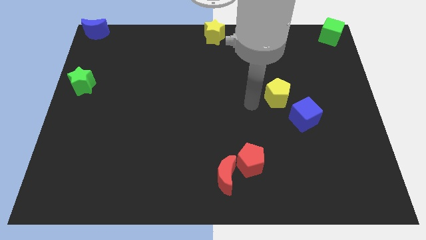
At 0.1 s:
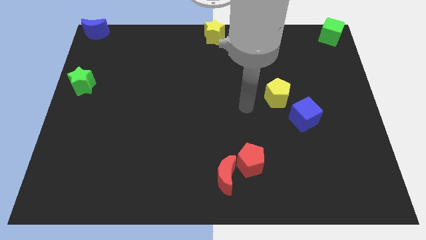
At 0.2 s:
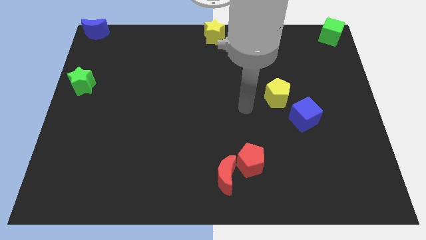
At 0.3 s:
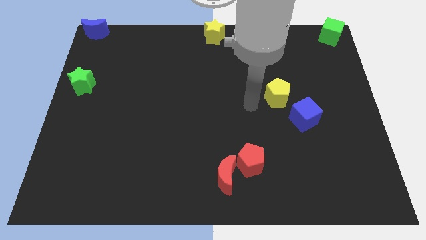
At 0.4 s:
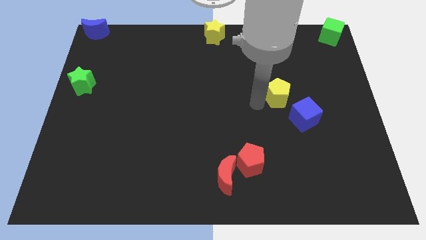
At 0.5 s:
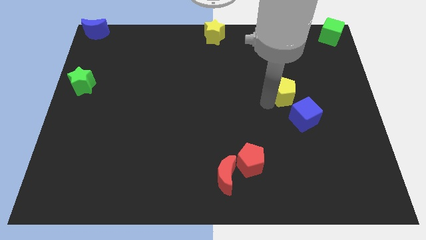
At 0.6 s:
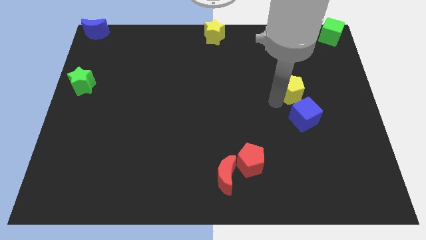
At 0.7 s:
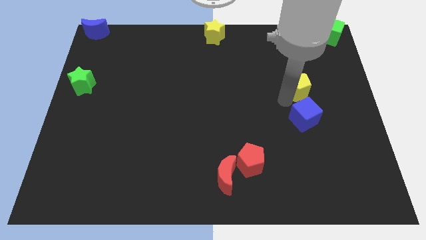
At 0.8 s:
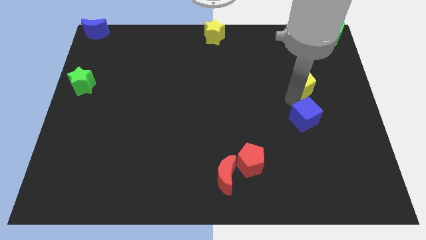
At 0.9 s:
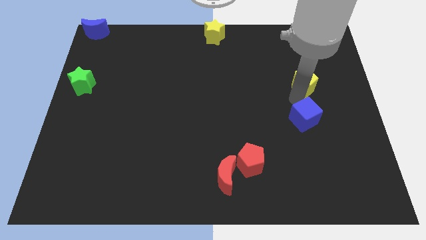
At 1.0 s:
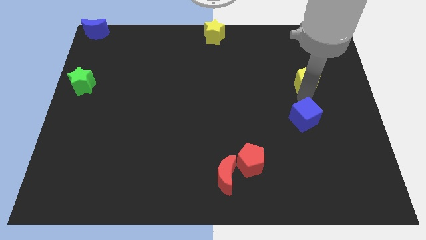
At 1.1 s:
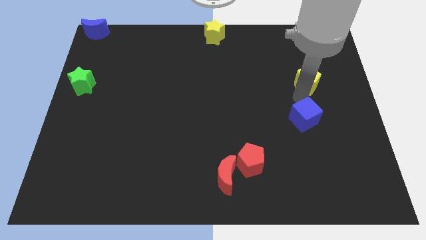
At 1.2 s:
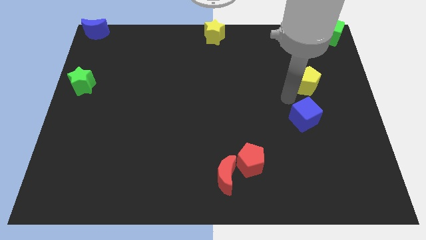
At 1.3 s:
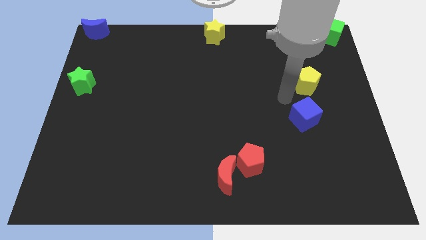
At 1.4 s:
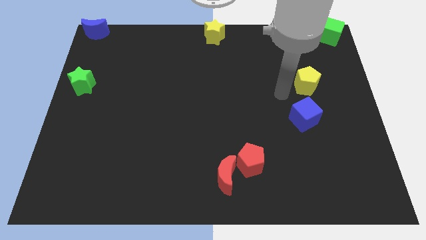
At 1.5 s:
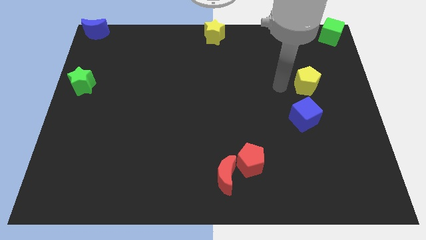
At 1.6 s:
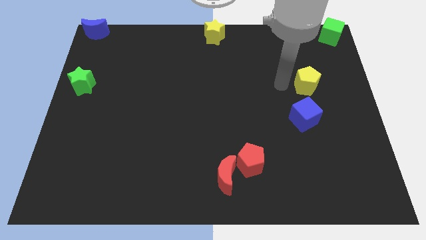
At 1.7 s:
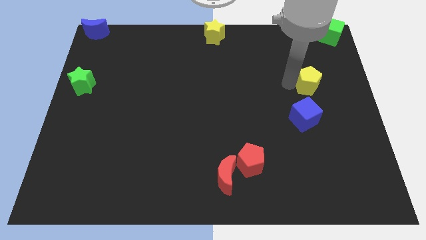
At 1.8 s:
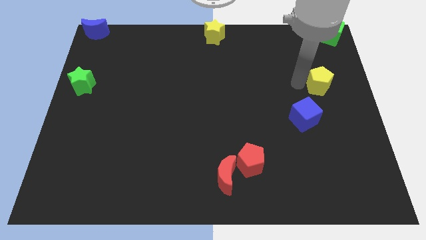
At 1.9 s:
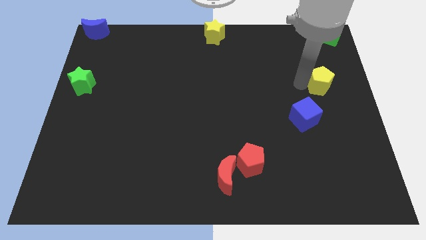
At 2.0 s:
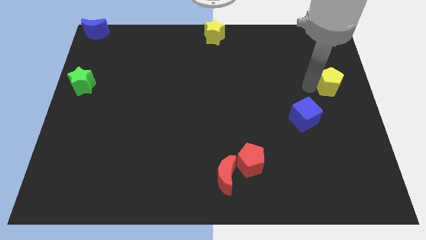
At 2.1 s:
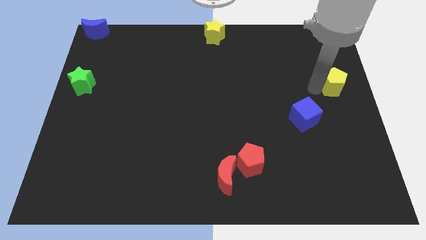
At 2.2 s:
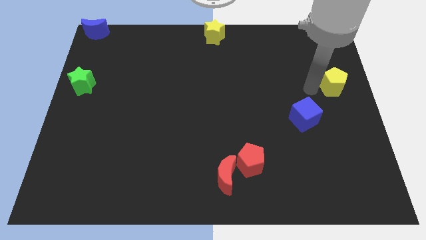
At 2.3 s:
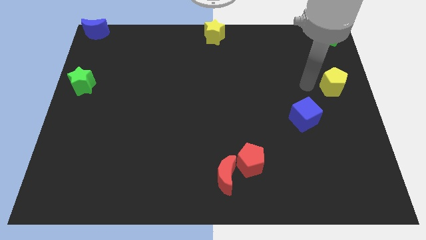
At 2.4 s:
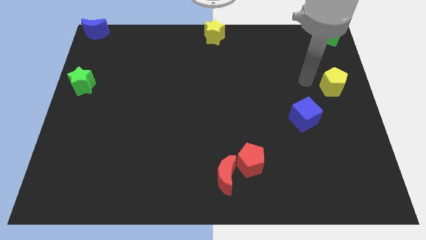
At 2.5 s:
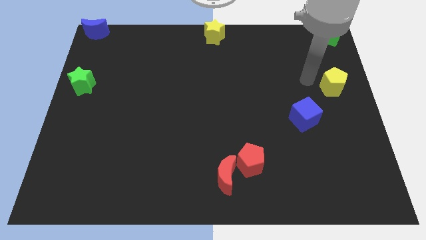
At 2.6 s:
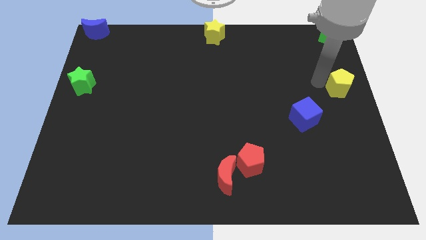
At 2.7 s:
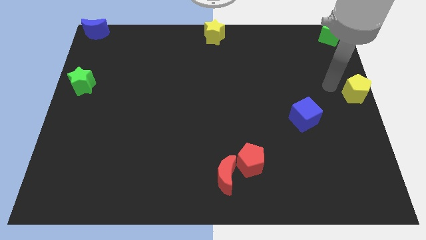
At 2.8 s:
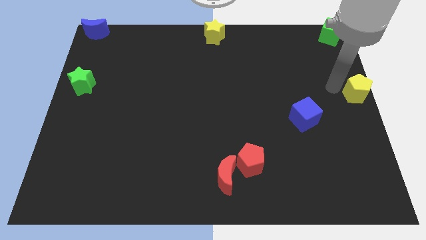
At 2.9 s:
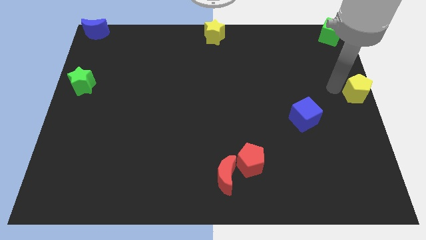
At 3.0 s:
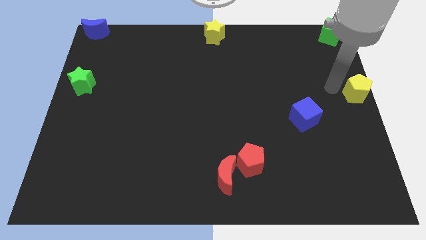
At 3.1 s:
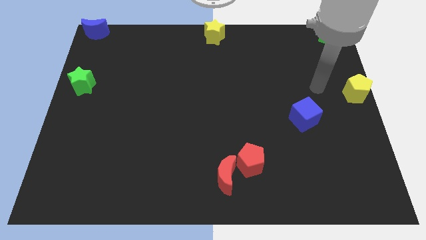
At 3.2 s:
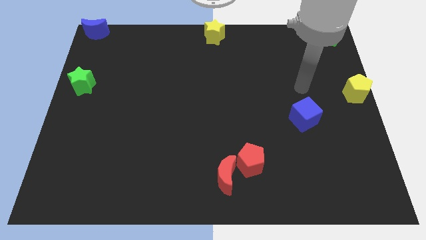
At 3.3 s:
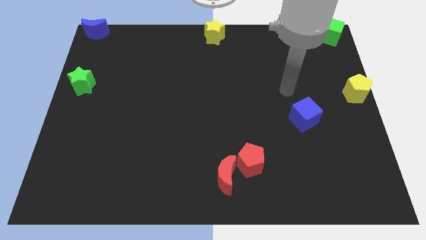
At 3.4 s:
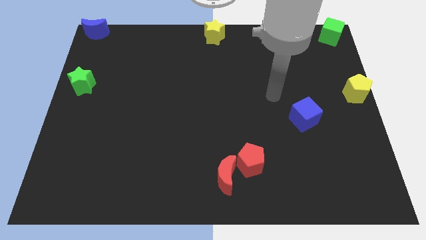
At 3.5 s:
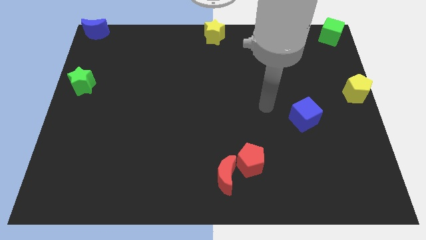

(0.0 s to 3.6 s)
move the yellow pentagon to the middle right of the board

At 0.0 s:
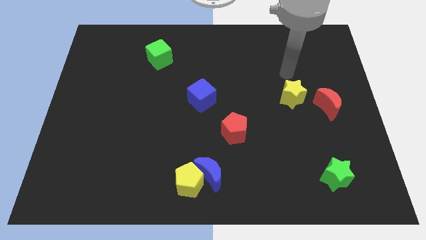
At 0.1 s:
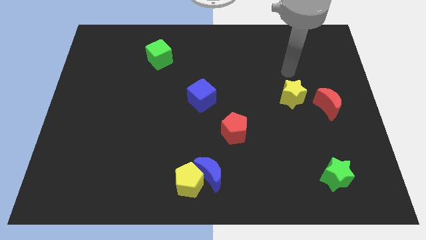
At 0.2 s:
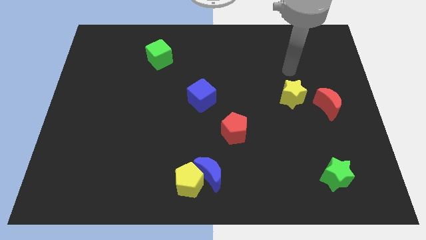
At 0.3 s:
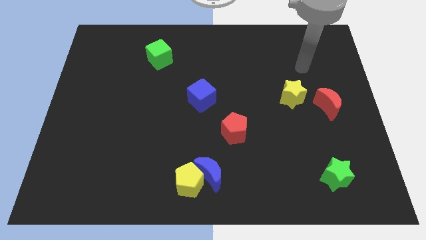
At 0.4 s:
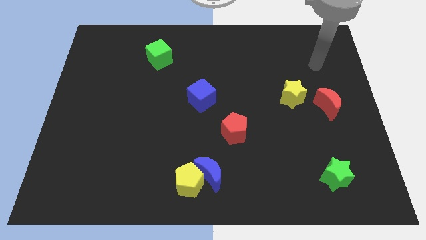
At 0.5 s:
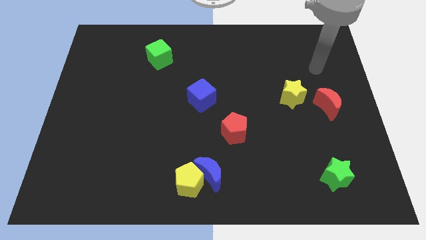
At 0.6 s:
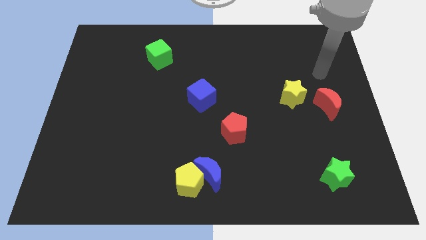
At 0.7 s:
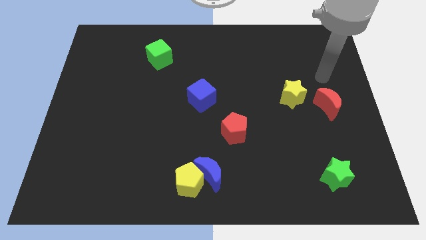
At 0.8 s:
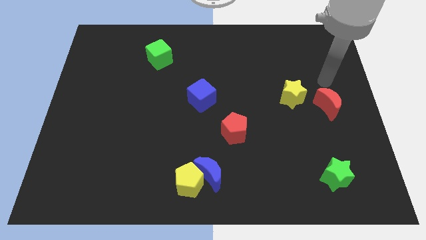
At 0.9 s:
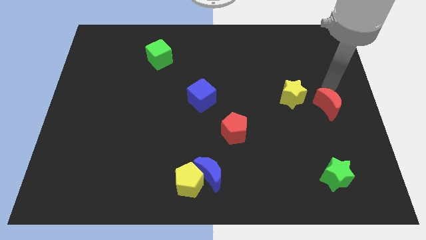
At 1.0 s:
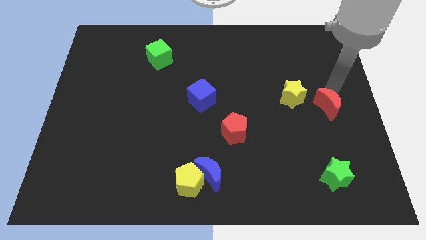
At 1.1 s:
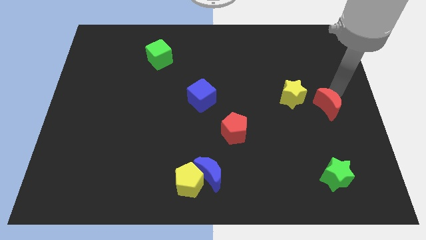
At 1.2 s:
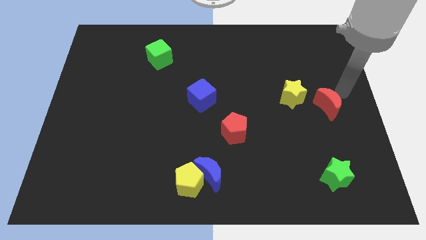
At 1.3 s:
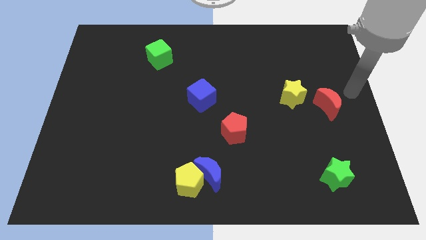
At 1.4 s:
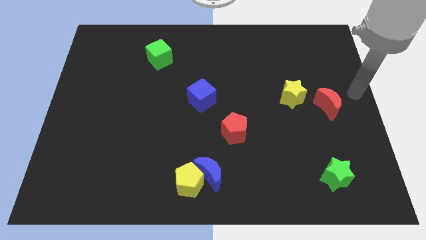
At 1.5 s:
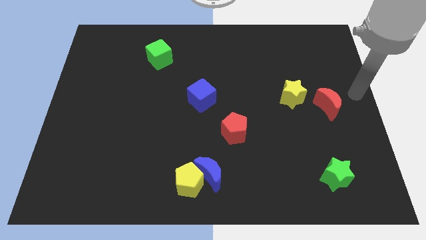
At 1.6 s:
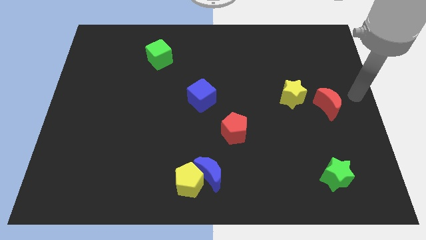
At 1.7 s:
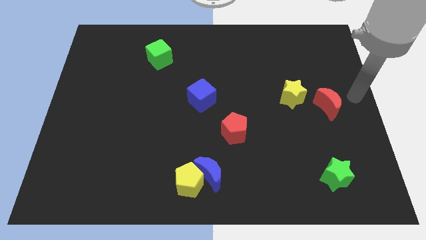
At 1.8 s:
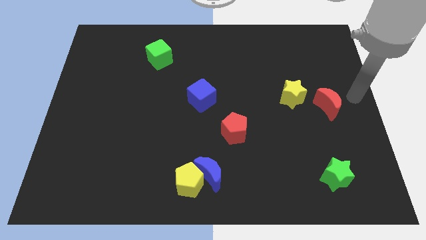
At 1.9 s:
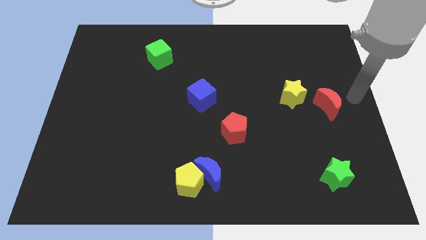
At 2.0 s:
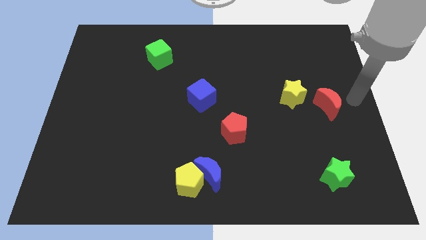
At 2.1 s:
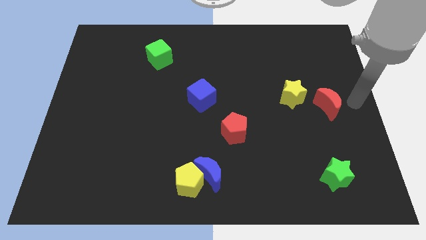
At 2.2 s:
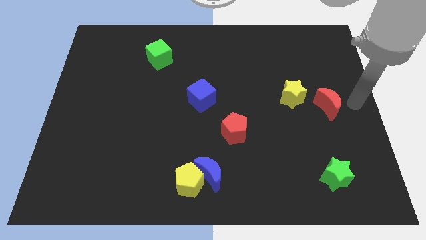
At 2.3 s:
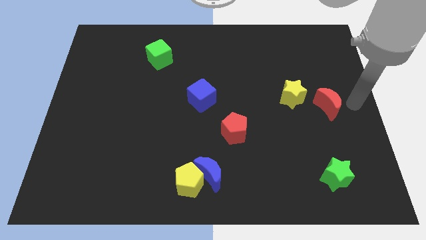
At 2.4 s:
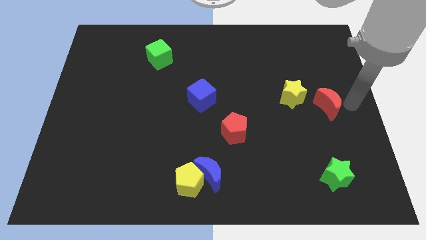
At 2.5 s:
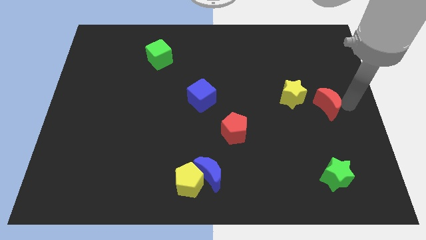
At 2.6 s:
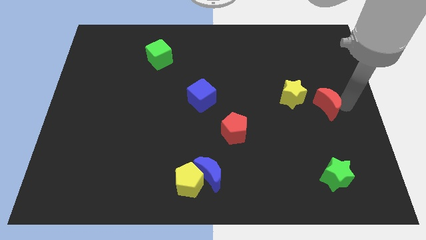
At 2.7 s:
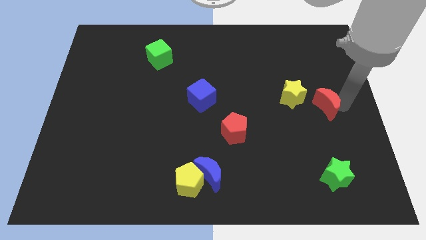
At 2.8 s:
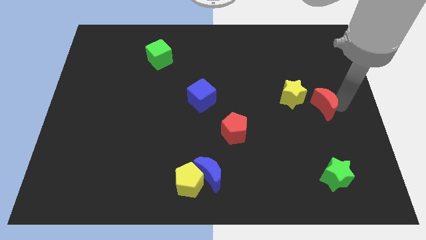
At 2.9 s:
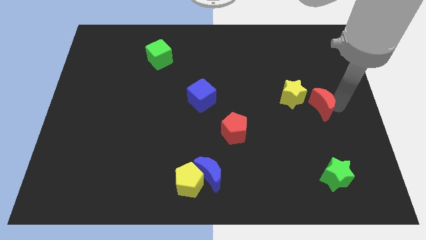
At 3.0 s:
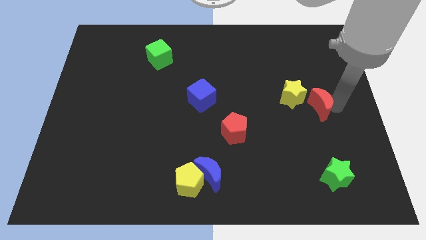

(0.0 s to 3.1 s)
push the red crescent slightly to the left

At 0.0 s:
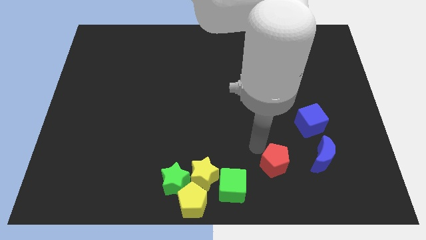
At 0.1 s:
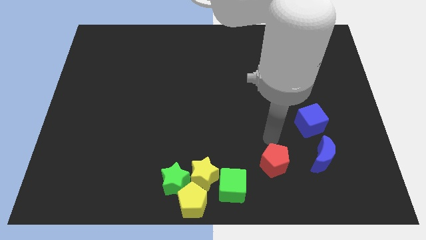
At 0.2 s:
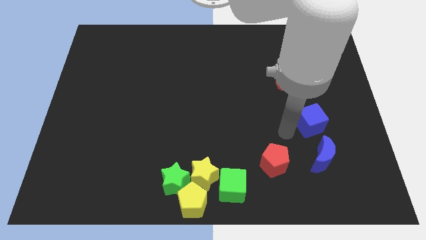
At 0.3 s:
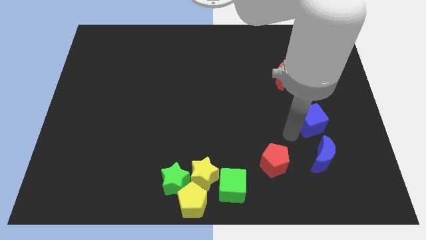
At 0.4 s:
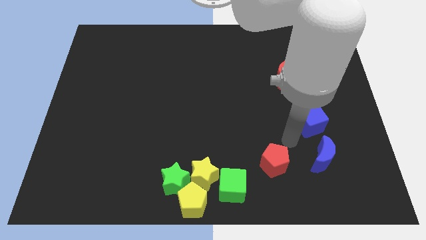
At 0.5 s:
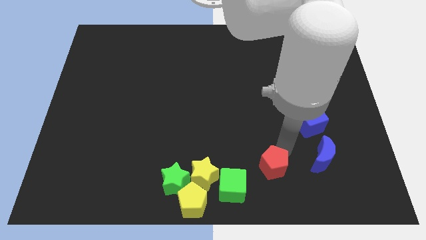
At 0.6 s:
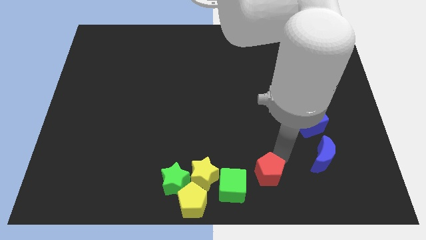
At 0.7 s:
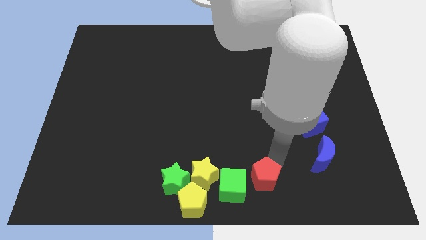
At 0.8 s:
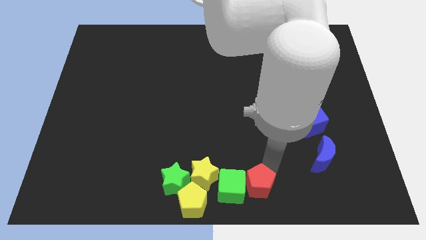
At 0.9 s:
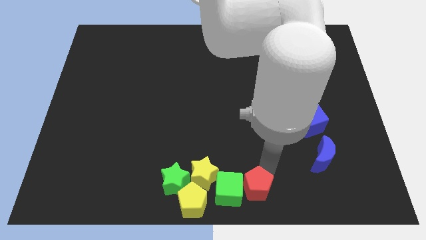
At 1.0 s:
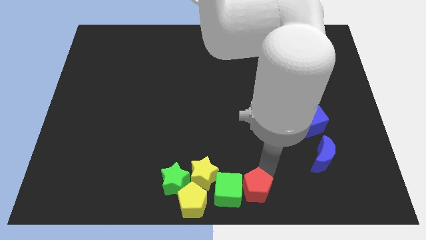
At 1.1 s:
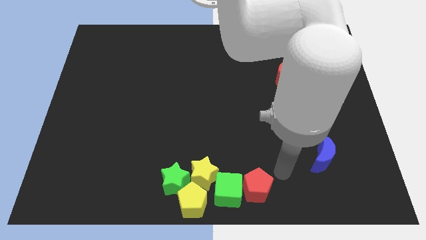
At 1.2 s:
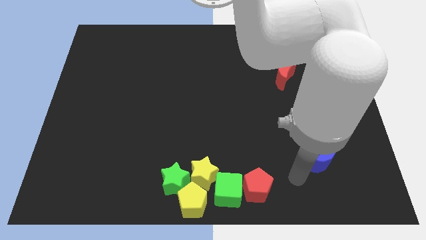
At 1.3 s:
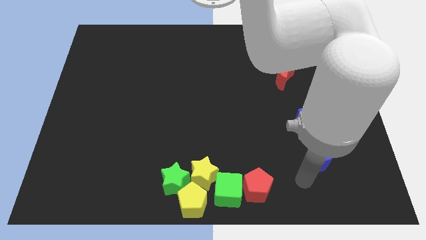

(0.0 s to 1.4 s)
push the pentagon to the right side of green cube

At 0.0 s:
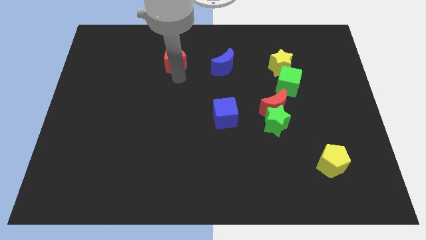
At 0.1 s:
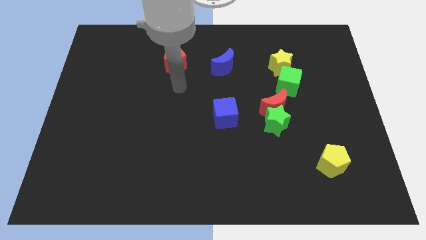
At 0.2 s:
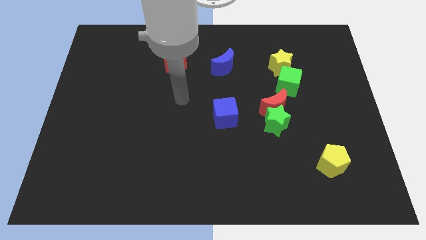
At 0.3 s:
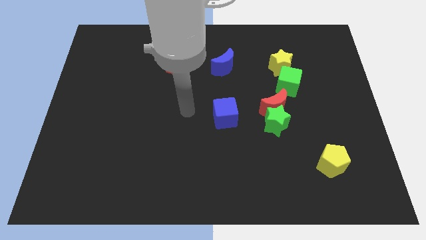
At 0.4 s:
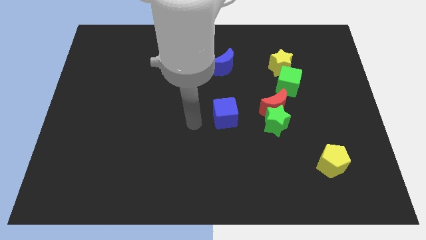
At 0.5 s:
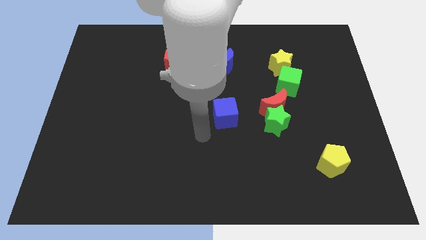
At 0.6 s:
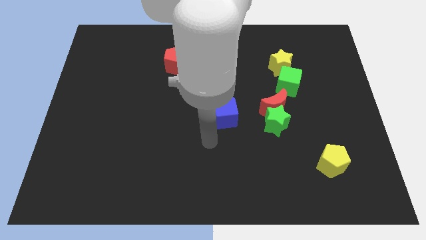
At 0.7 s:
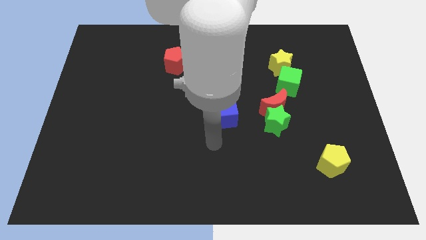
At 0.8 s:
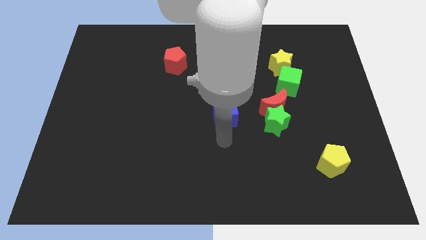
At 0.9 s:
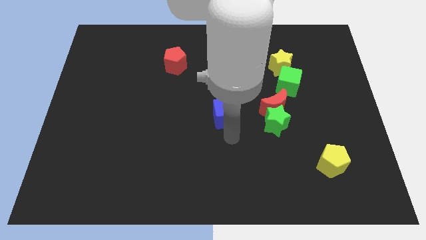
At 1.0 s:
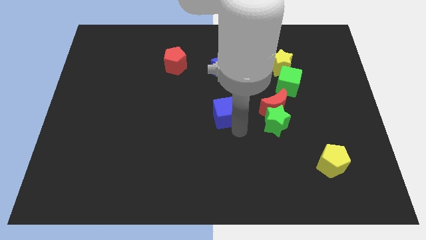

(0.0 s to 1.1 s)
move your arm towards the blue cube
